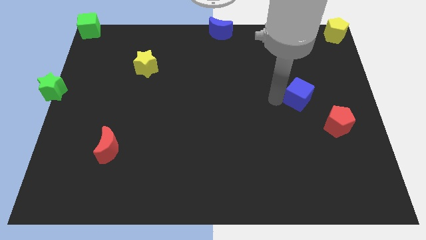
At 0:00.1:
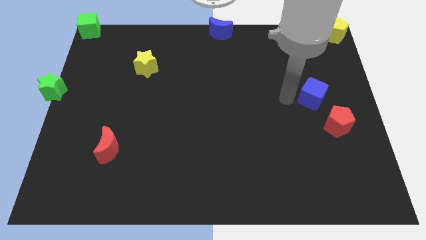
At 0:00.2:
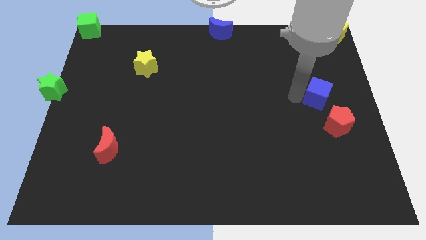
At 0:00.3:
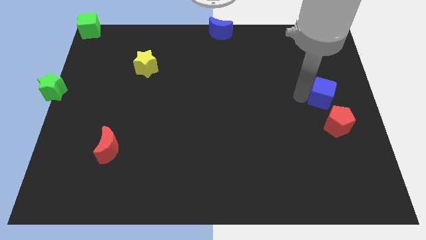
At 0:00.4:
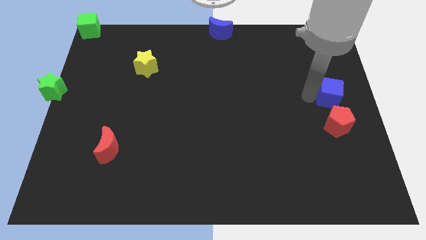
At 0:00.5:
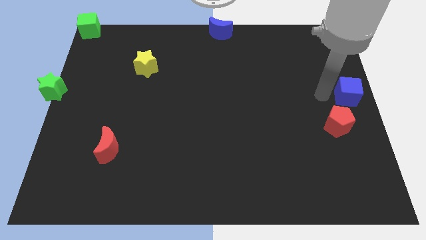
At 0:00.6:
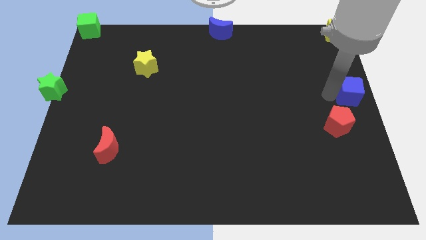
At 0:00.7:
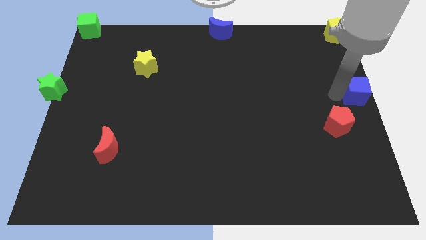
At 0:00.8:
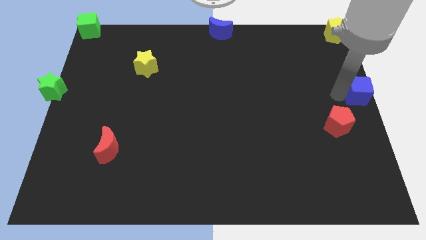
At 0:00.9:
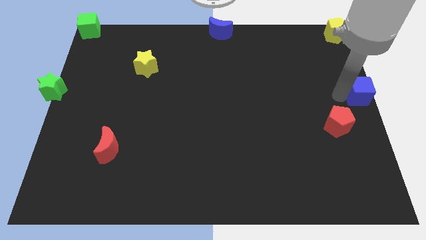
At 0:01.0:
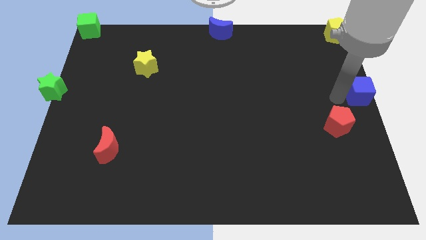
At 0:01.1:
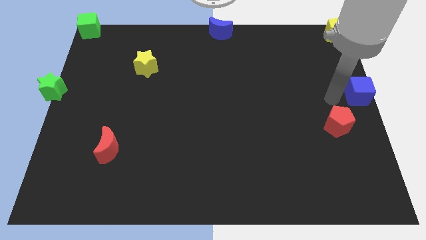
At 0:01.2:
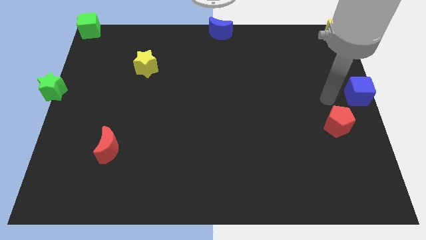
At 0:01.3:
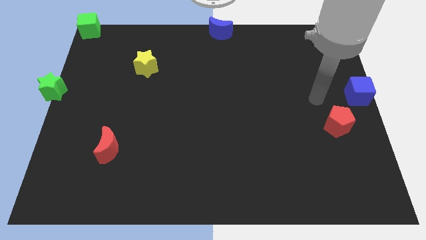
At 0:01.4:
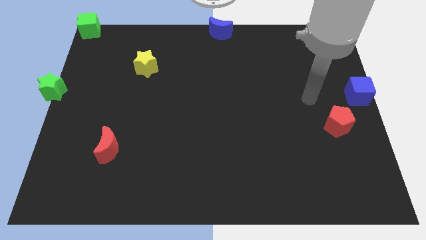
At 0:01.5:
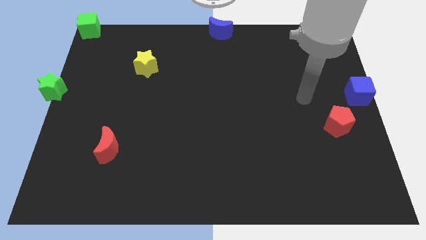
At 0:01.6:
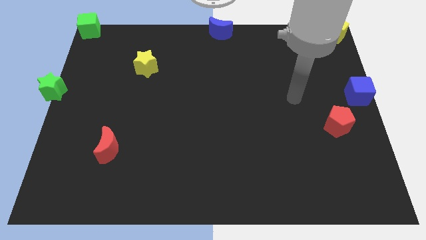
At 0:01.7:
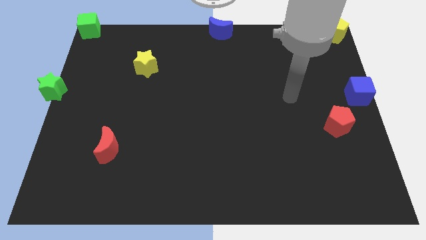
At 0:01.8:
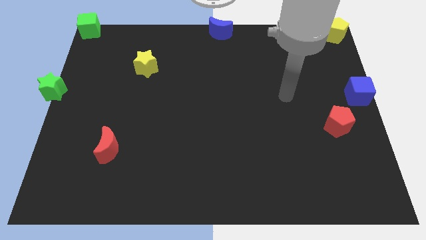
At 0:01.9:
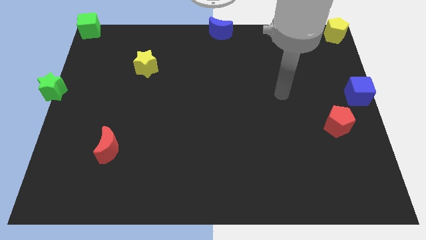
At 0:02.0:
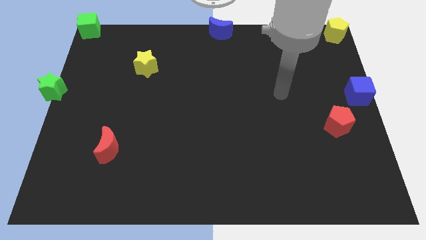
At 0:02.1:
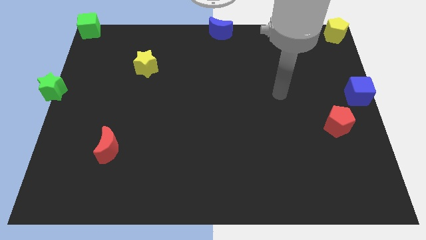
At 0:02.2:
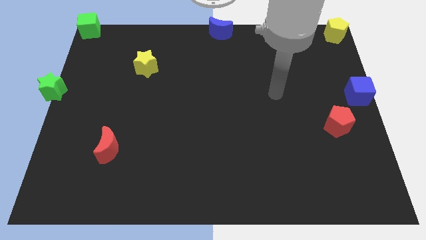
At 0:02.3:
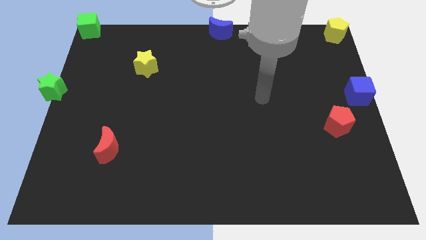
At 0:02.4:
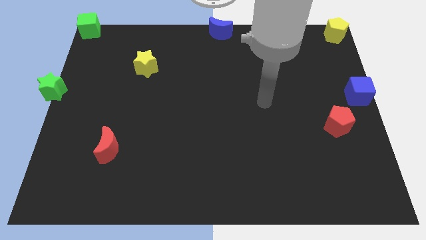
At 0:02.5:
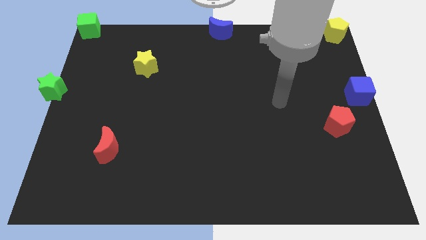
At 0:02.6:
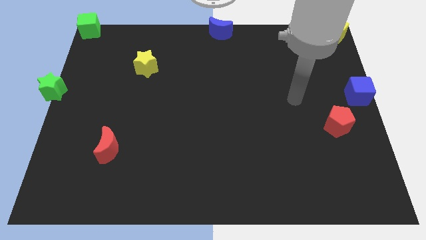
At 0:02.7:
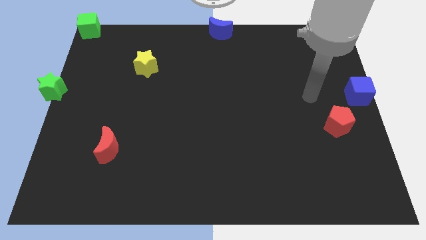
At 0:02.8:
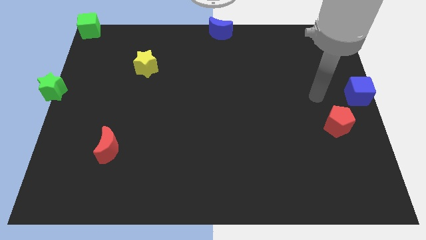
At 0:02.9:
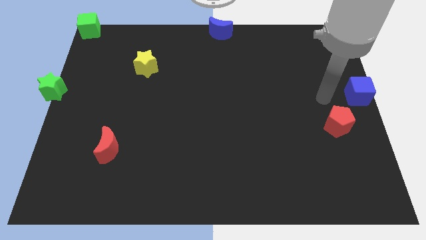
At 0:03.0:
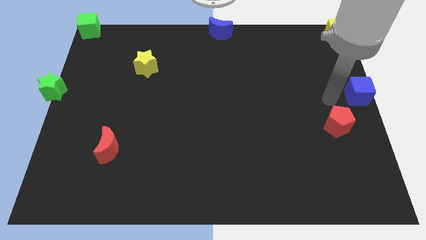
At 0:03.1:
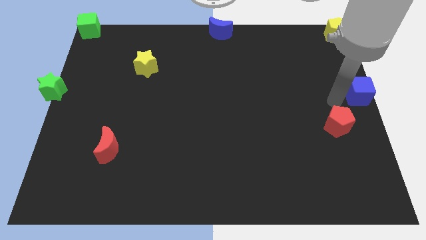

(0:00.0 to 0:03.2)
place the blue cube vertically below the yellow pentagon

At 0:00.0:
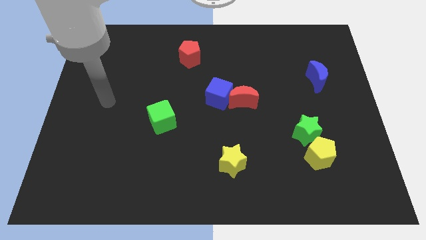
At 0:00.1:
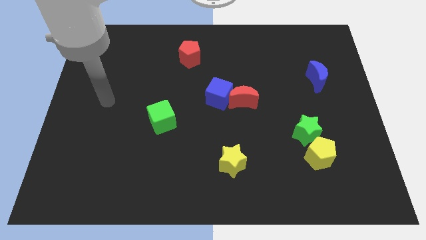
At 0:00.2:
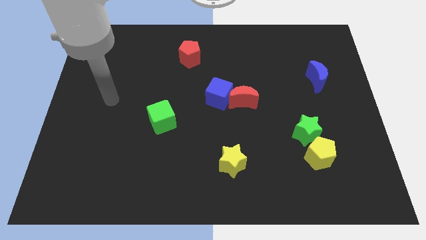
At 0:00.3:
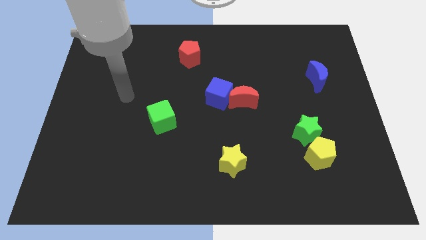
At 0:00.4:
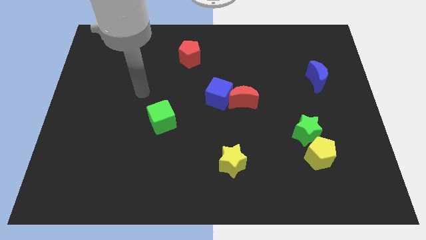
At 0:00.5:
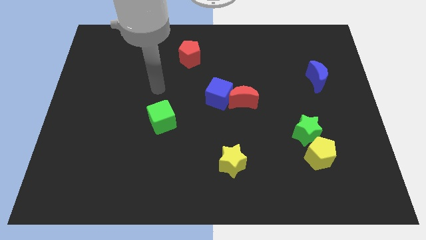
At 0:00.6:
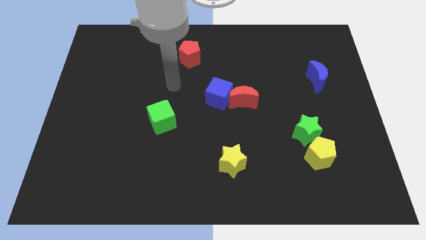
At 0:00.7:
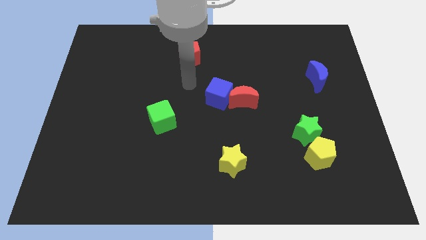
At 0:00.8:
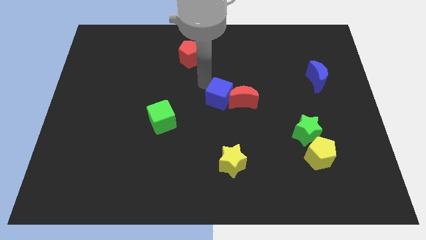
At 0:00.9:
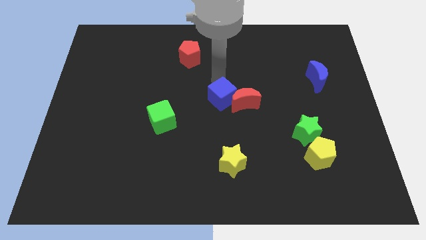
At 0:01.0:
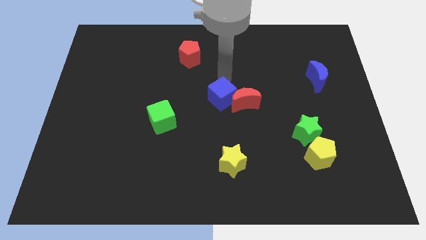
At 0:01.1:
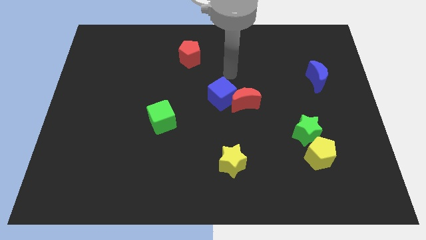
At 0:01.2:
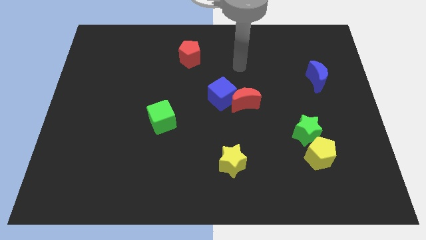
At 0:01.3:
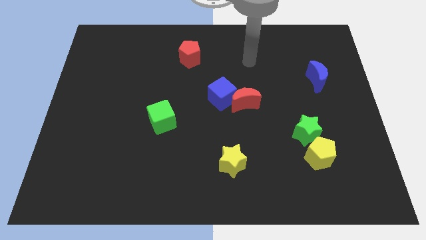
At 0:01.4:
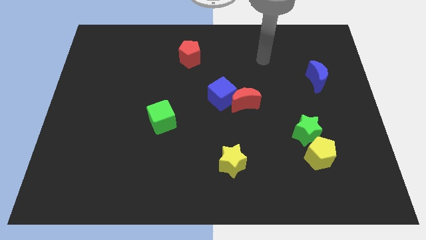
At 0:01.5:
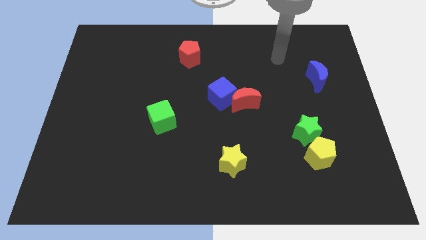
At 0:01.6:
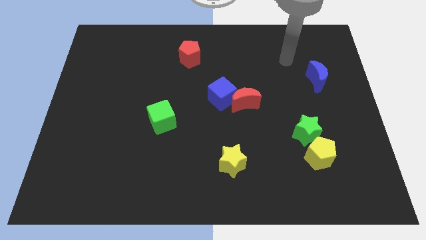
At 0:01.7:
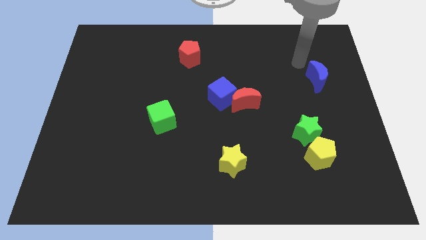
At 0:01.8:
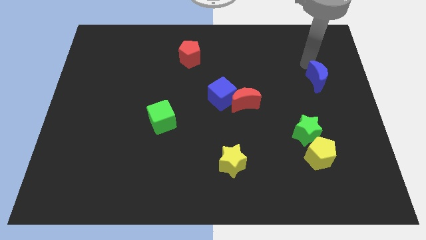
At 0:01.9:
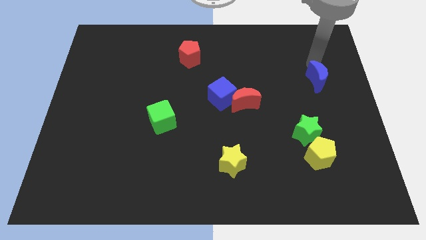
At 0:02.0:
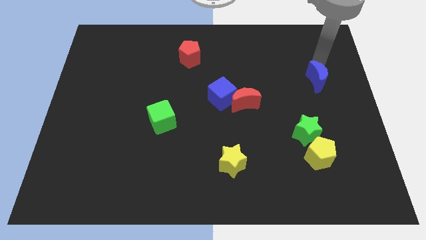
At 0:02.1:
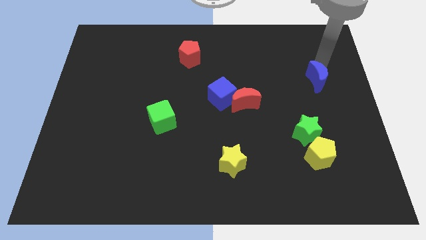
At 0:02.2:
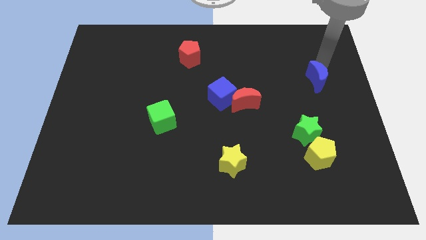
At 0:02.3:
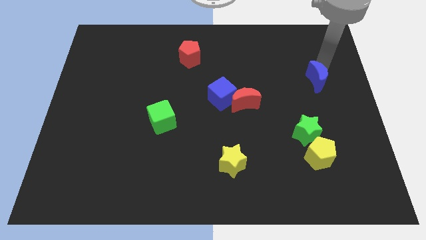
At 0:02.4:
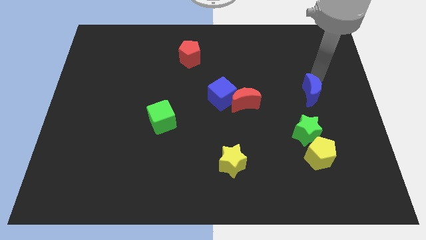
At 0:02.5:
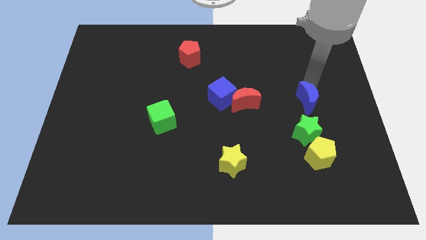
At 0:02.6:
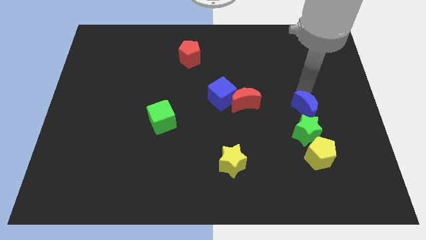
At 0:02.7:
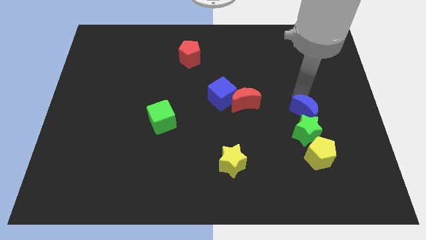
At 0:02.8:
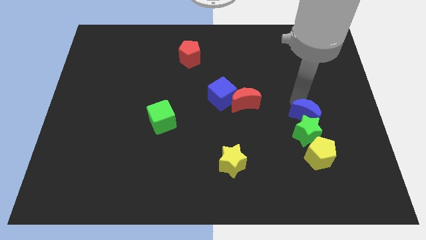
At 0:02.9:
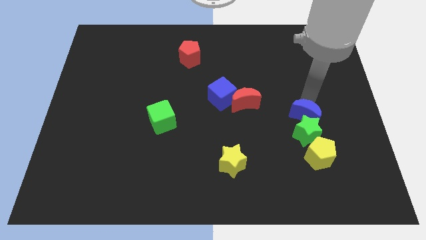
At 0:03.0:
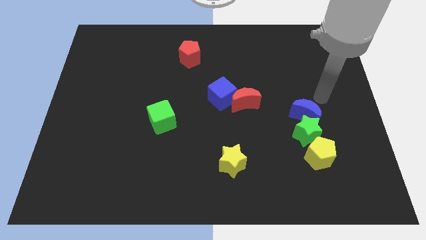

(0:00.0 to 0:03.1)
move blue crescent to the top of green star

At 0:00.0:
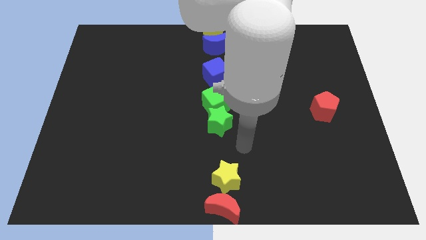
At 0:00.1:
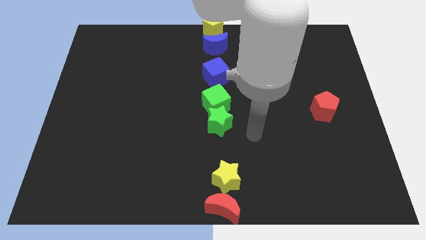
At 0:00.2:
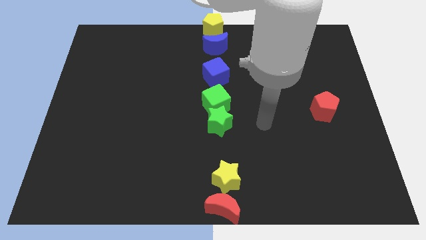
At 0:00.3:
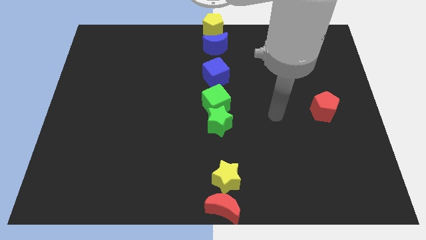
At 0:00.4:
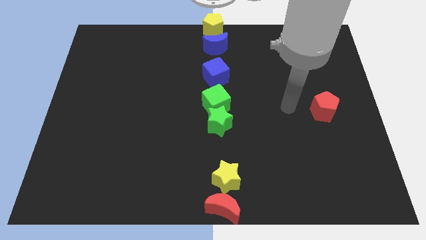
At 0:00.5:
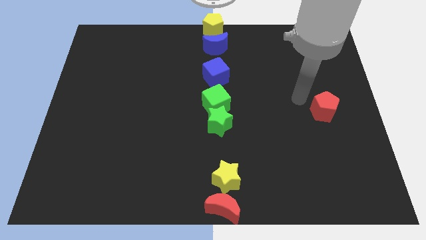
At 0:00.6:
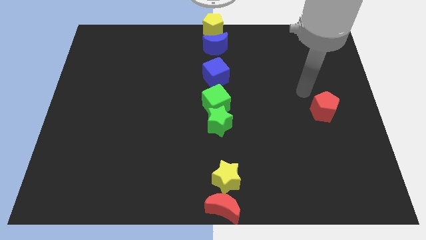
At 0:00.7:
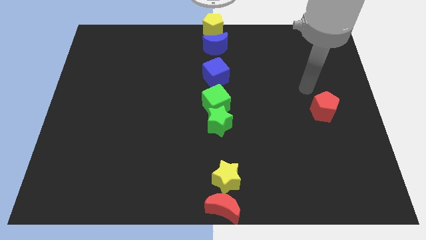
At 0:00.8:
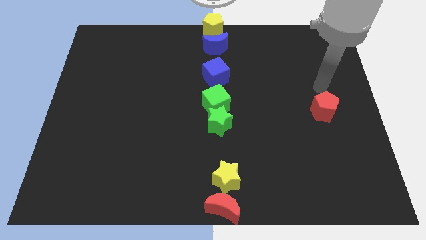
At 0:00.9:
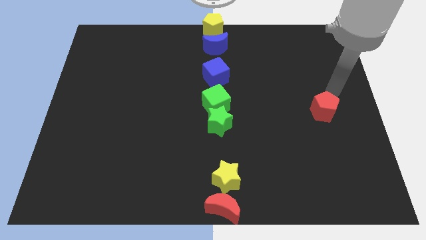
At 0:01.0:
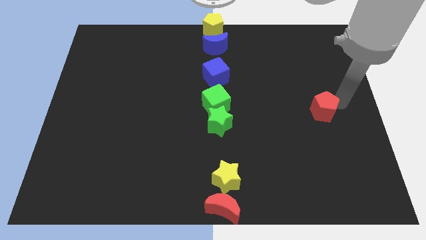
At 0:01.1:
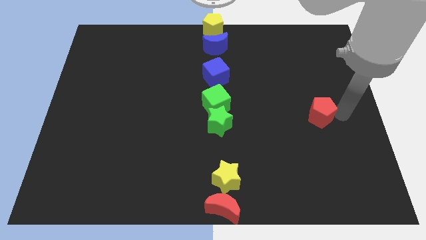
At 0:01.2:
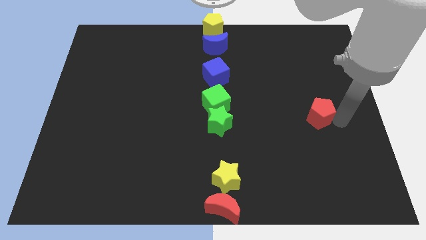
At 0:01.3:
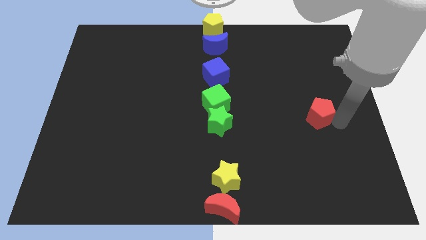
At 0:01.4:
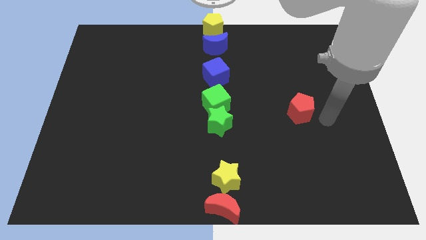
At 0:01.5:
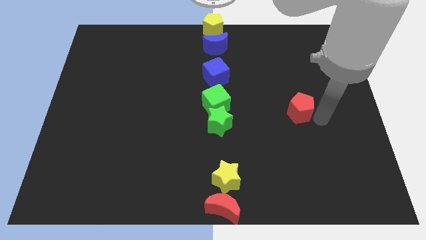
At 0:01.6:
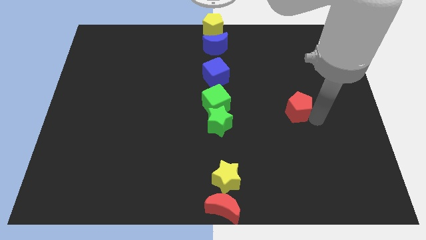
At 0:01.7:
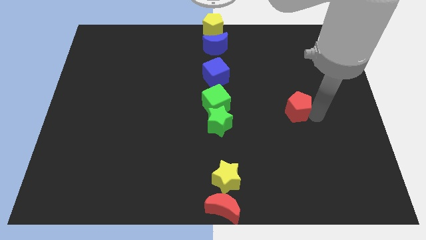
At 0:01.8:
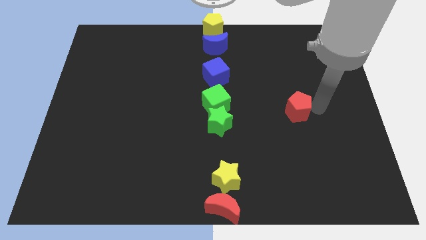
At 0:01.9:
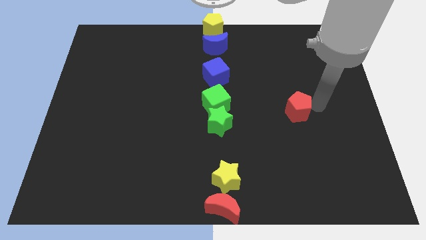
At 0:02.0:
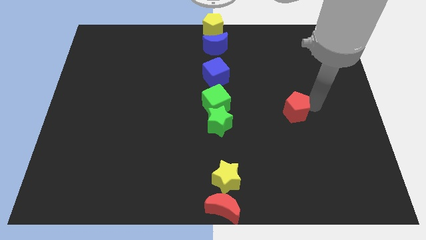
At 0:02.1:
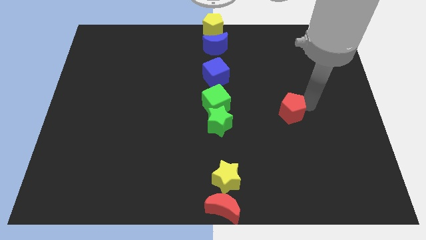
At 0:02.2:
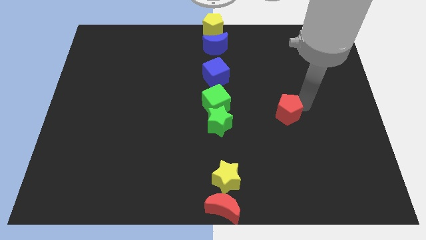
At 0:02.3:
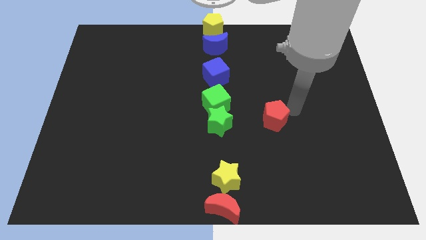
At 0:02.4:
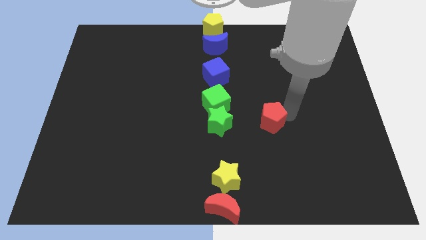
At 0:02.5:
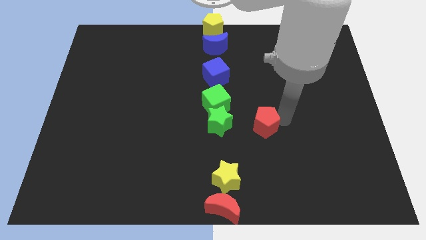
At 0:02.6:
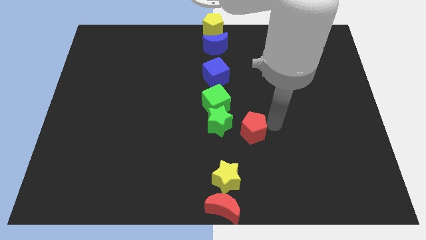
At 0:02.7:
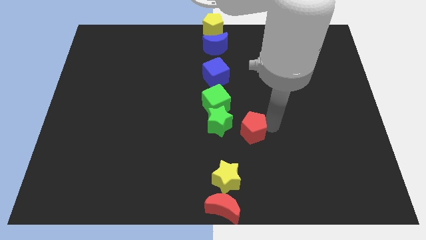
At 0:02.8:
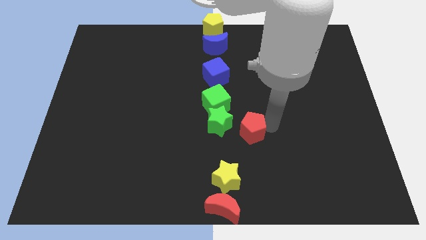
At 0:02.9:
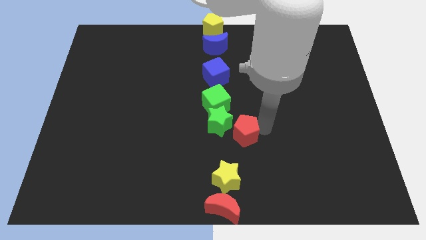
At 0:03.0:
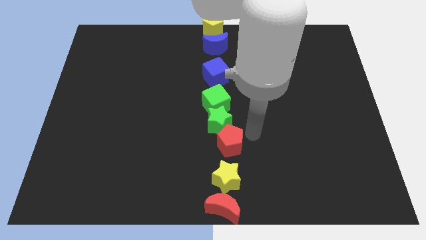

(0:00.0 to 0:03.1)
move the red pentagon to the bottom right of the green star
